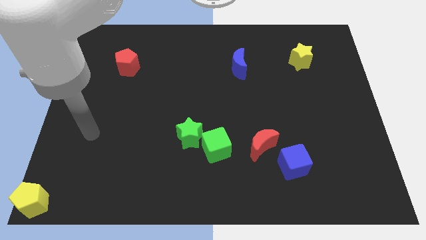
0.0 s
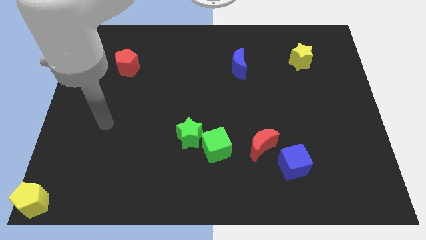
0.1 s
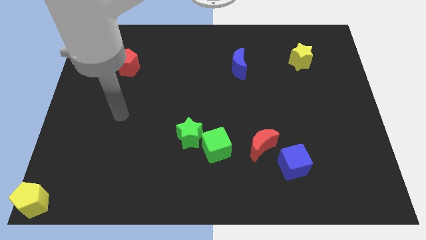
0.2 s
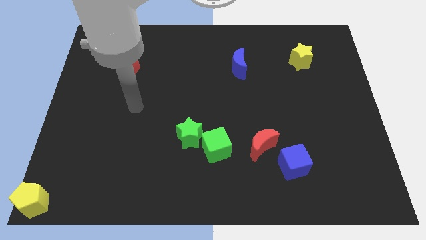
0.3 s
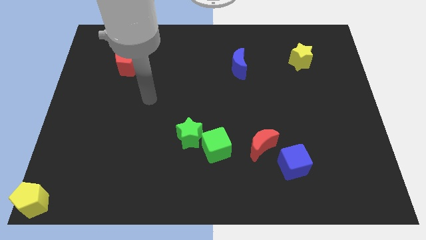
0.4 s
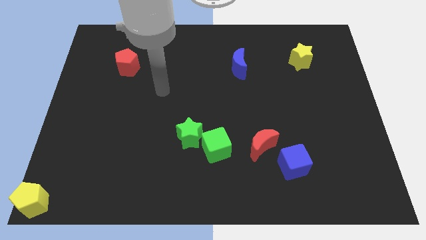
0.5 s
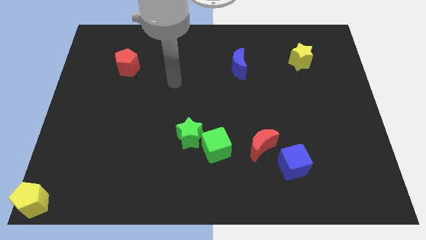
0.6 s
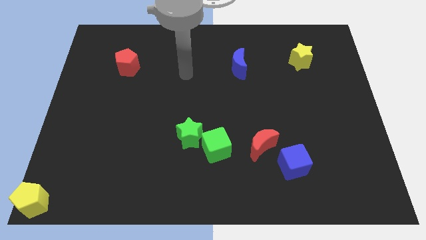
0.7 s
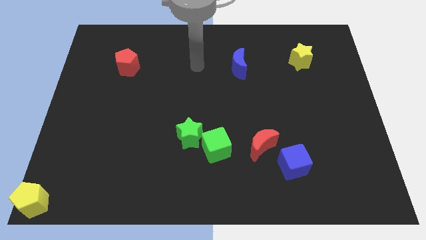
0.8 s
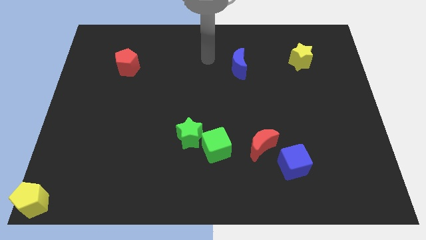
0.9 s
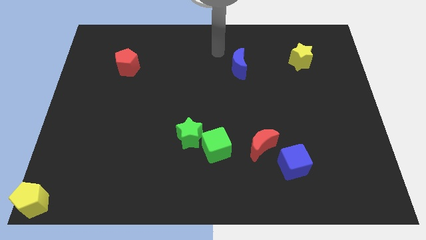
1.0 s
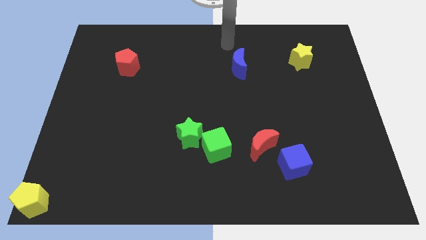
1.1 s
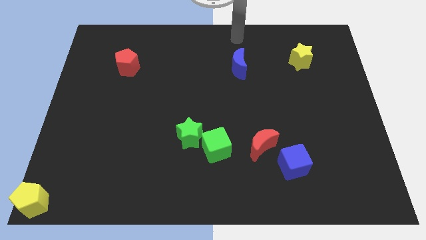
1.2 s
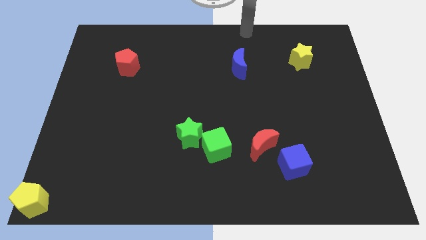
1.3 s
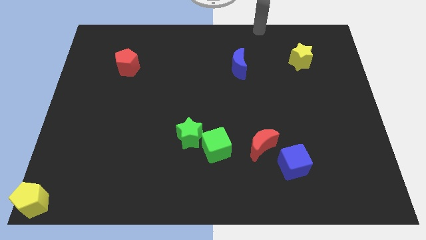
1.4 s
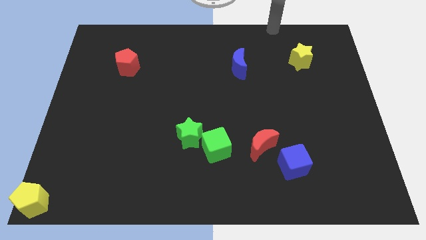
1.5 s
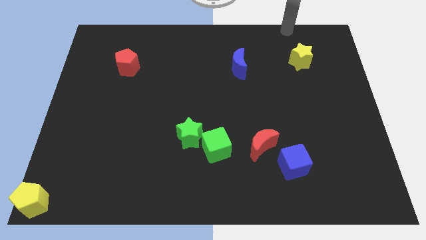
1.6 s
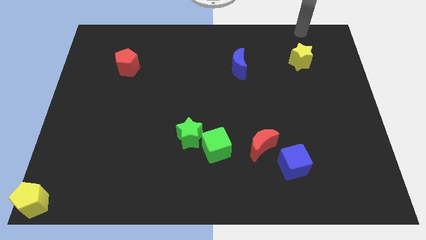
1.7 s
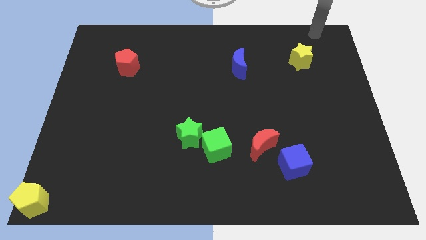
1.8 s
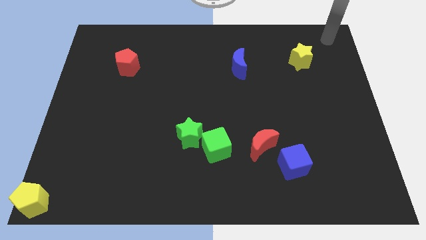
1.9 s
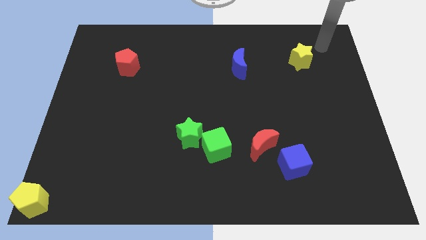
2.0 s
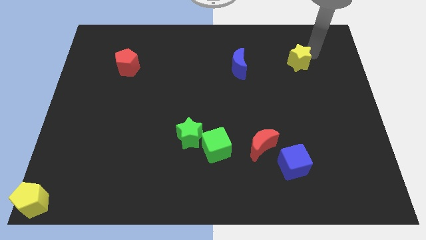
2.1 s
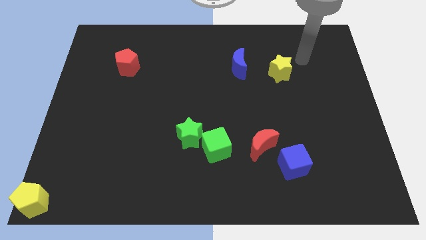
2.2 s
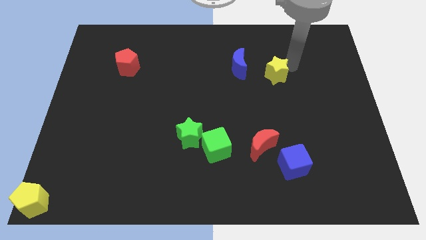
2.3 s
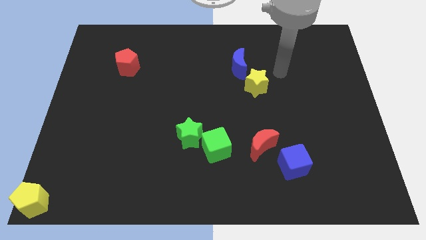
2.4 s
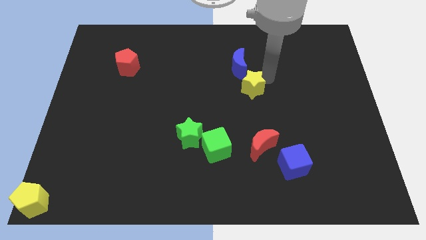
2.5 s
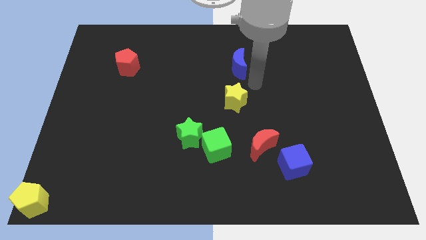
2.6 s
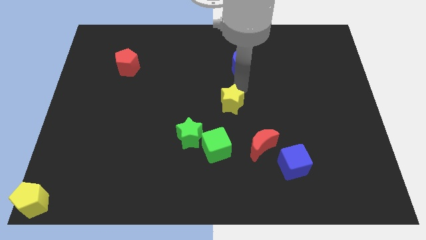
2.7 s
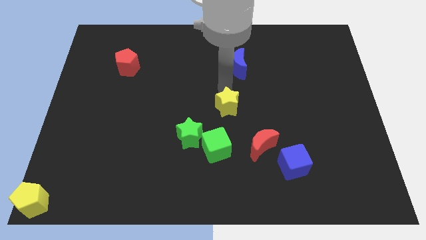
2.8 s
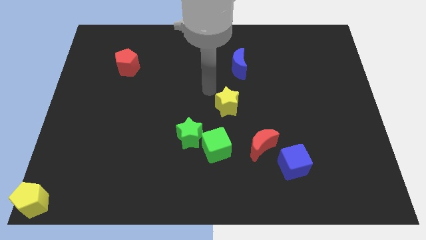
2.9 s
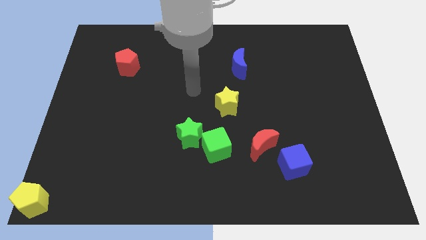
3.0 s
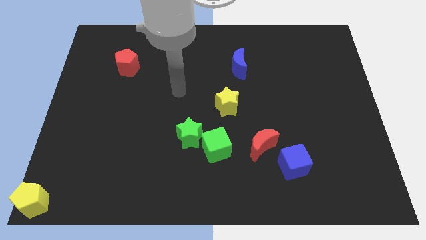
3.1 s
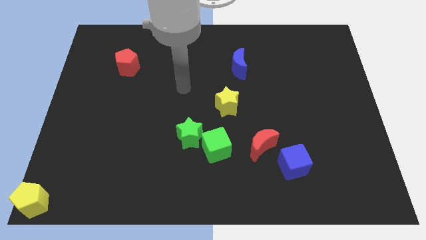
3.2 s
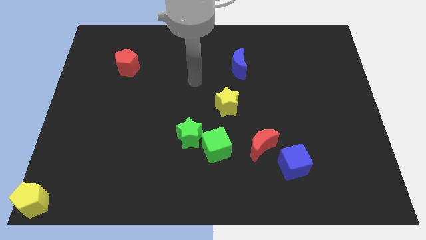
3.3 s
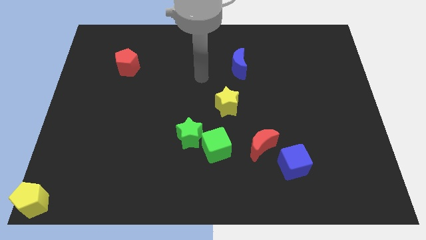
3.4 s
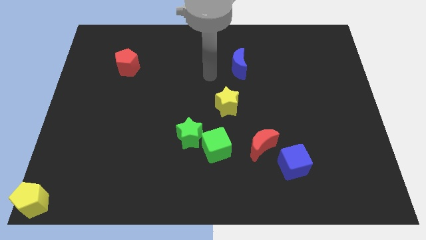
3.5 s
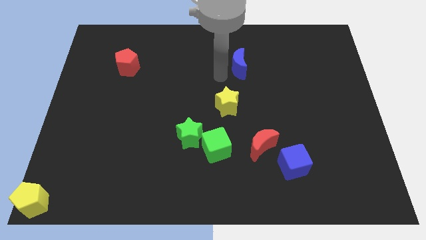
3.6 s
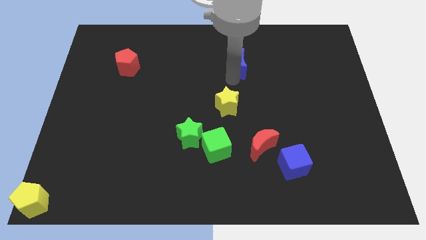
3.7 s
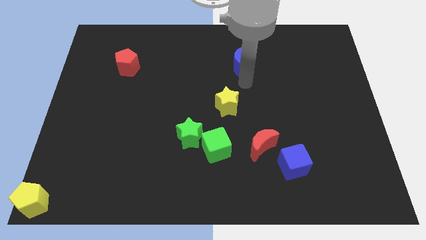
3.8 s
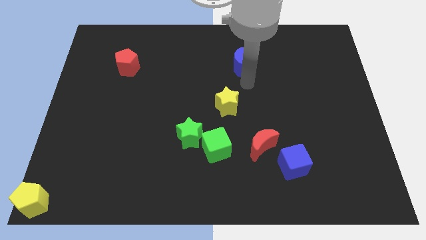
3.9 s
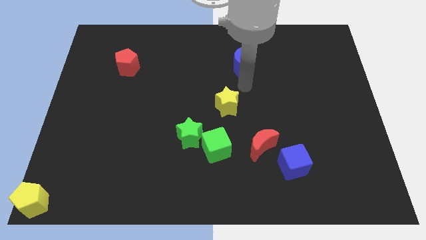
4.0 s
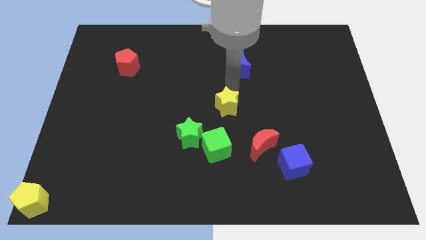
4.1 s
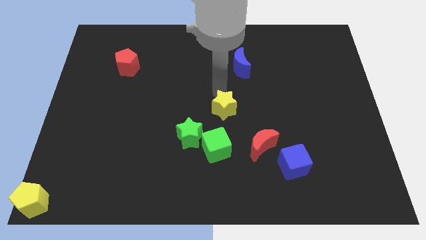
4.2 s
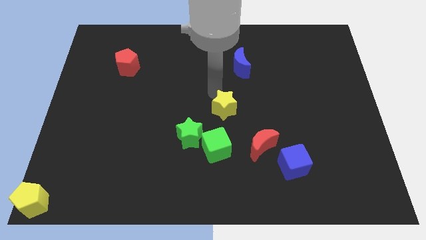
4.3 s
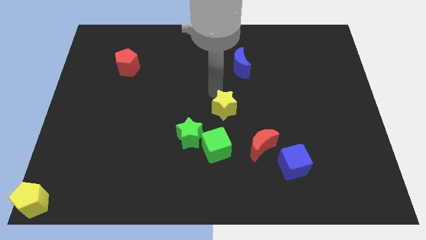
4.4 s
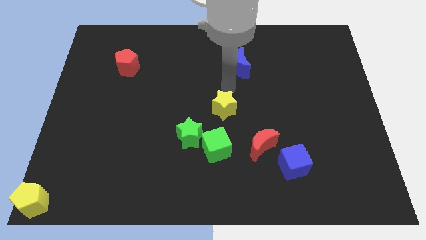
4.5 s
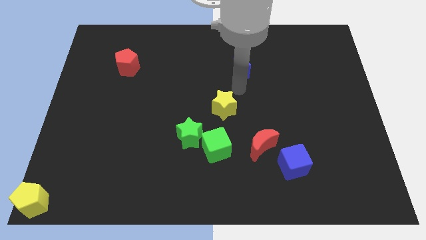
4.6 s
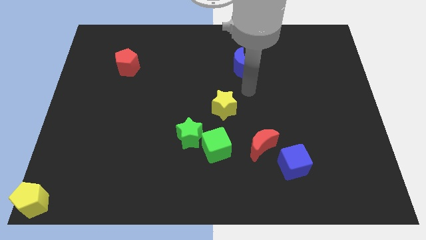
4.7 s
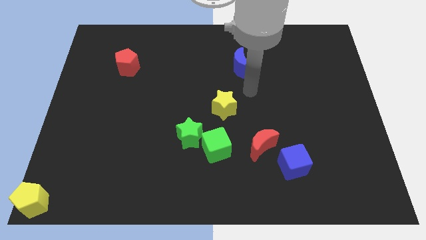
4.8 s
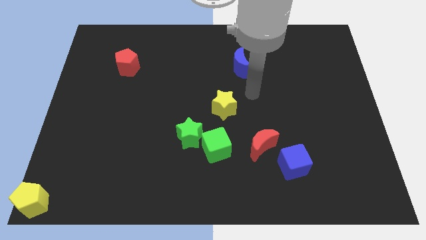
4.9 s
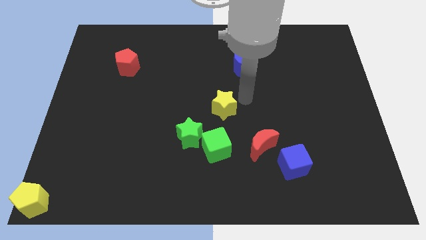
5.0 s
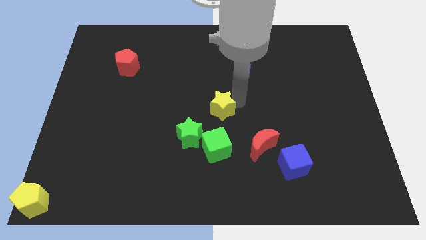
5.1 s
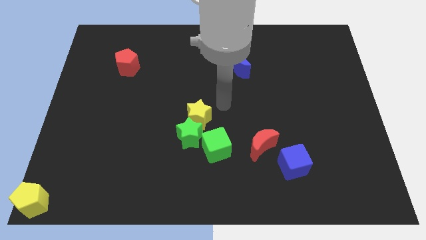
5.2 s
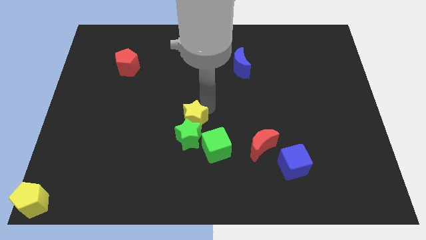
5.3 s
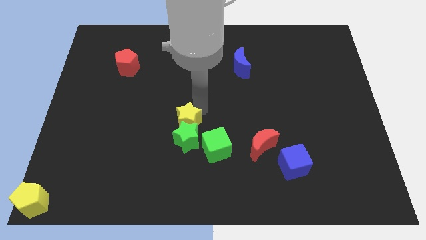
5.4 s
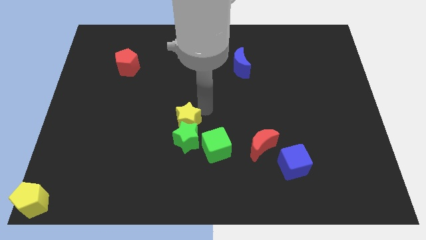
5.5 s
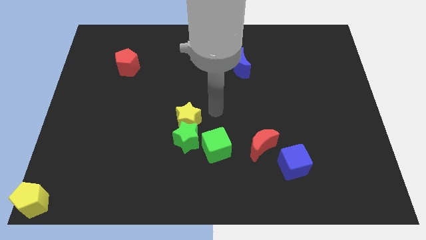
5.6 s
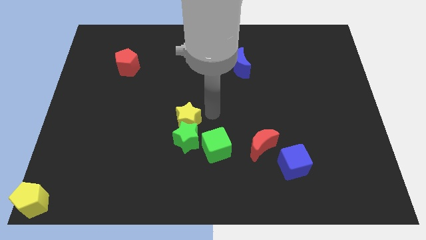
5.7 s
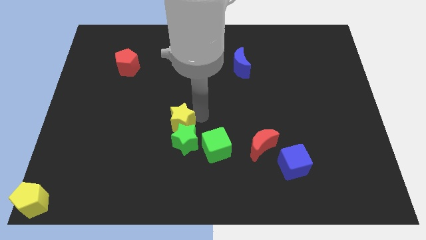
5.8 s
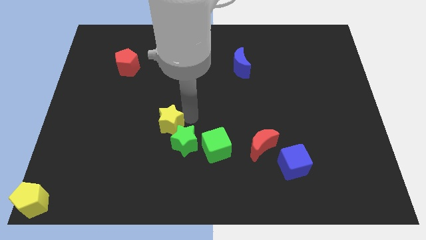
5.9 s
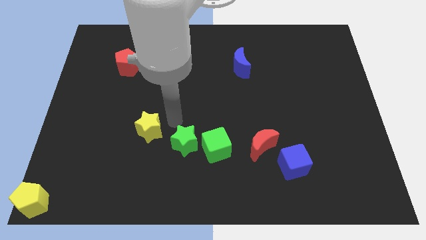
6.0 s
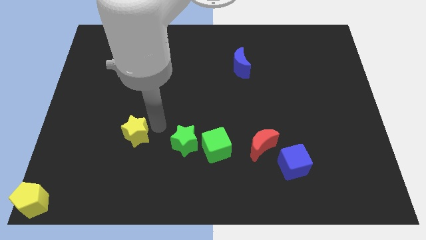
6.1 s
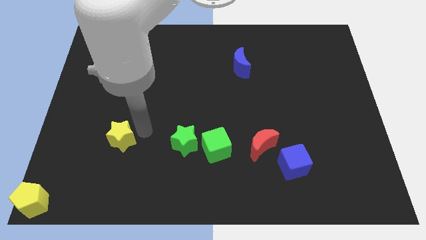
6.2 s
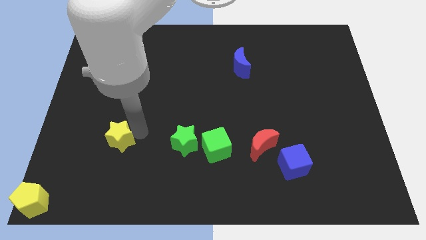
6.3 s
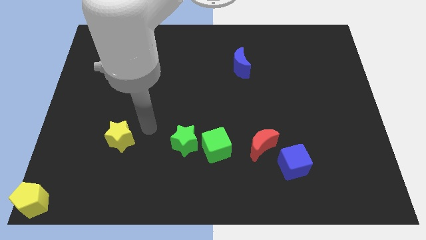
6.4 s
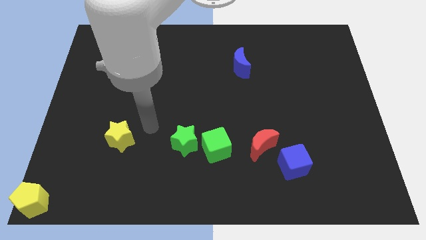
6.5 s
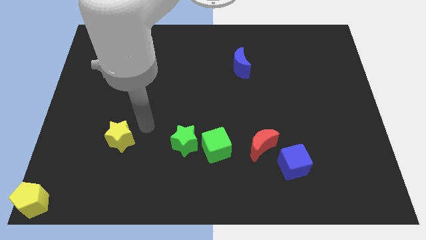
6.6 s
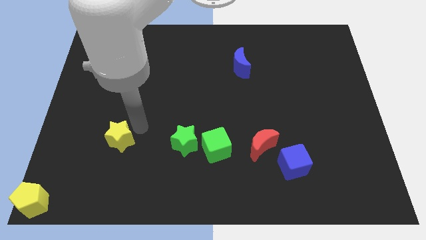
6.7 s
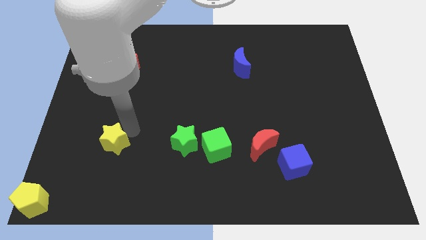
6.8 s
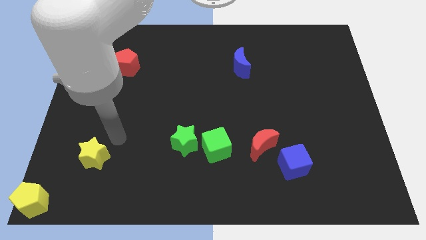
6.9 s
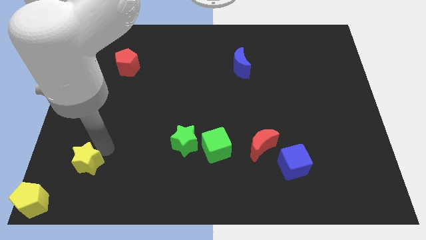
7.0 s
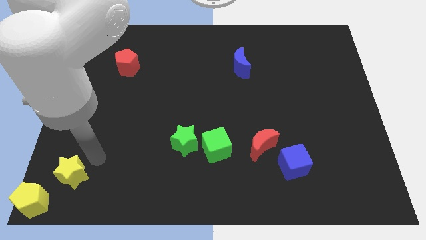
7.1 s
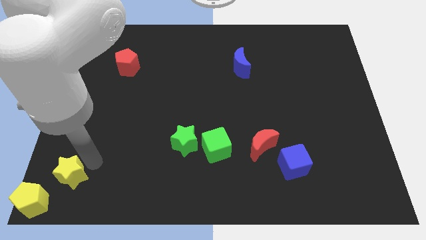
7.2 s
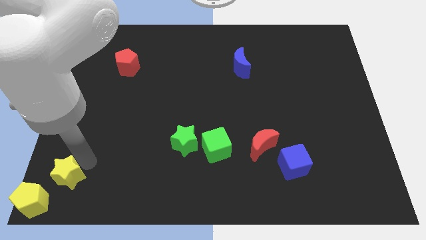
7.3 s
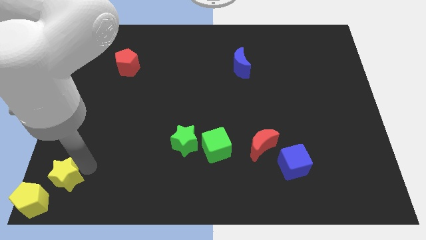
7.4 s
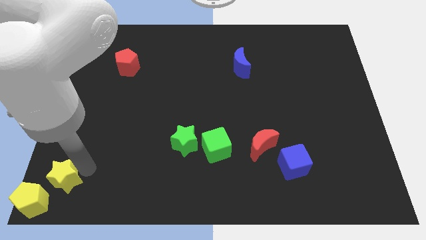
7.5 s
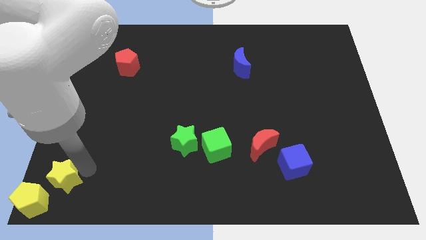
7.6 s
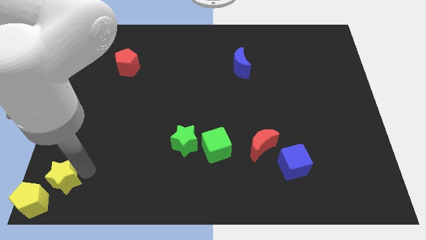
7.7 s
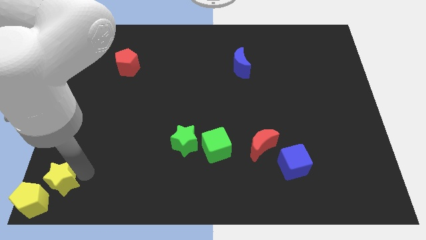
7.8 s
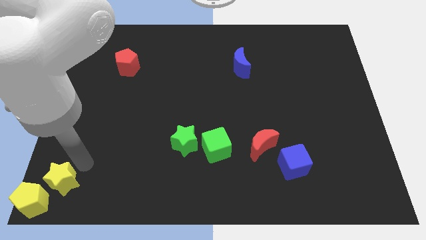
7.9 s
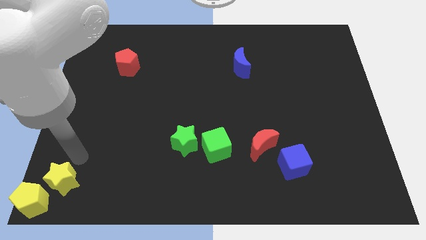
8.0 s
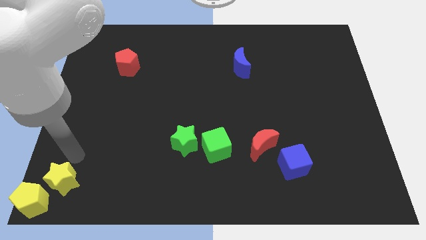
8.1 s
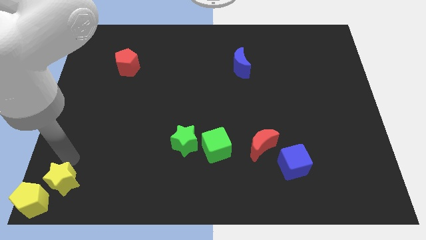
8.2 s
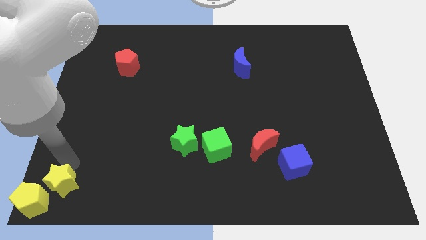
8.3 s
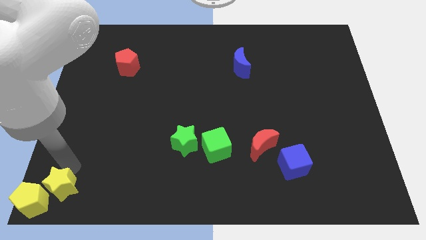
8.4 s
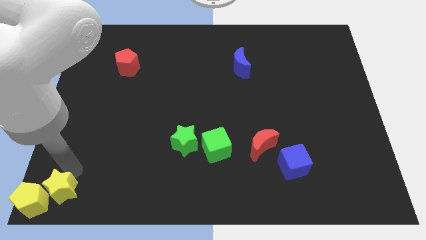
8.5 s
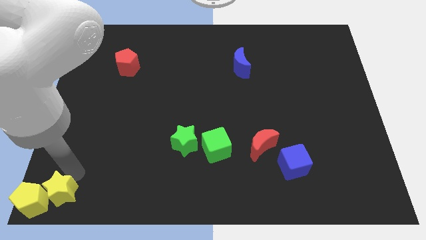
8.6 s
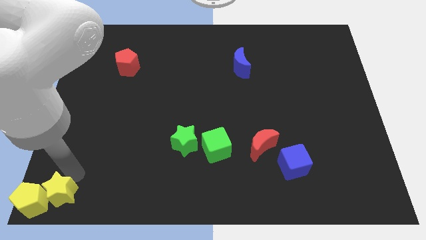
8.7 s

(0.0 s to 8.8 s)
push the yellow star to the right side of the yellow pentagon
